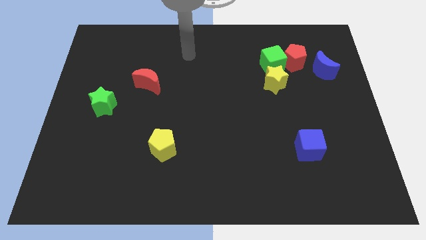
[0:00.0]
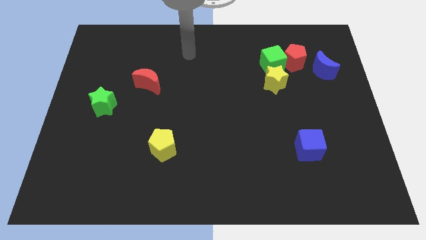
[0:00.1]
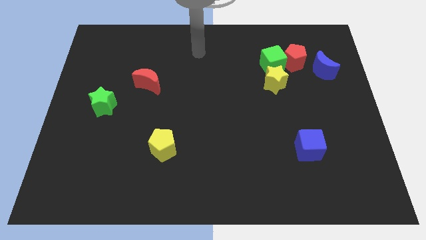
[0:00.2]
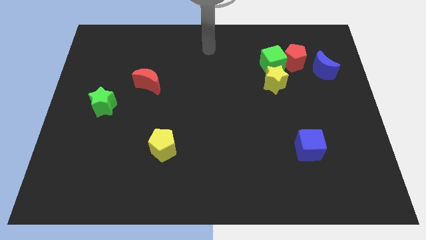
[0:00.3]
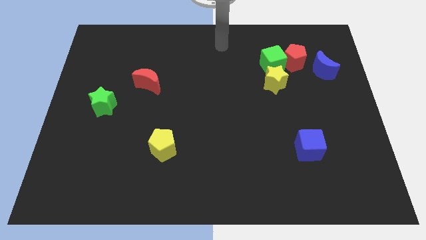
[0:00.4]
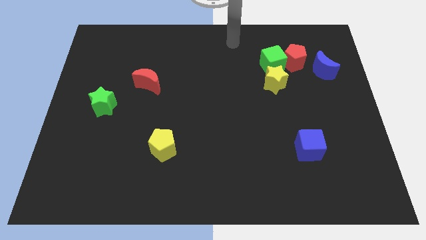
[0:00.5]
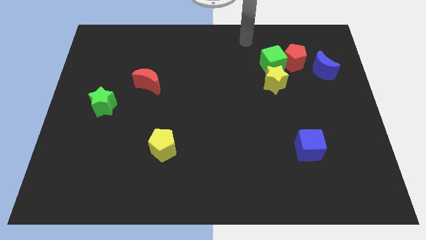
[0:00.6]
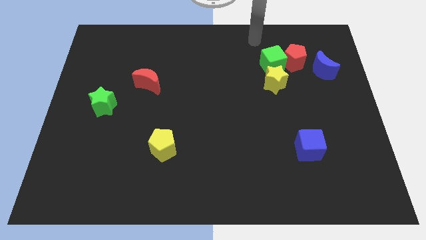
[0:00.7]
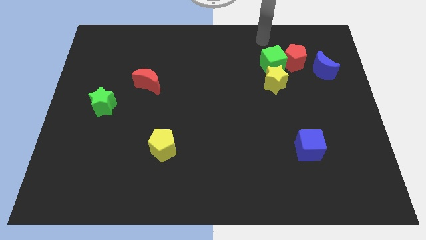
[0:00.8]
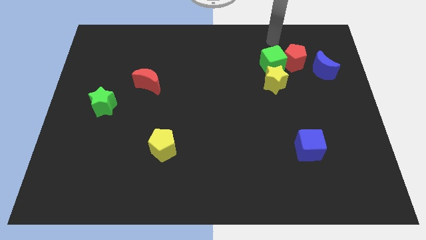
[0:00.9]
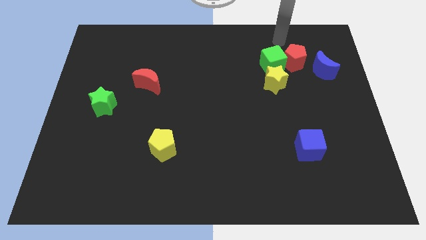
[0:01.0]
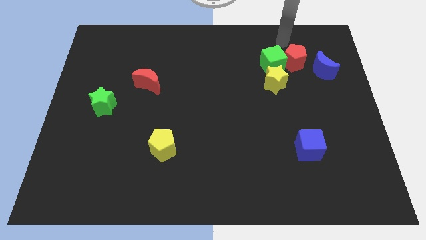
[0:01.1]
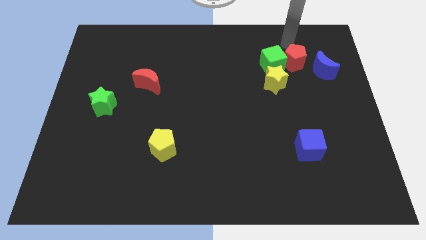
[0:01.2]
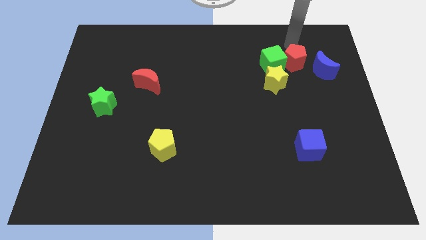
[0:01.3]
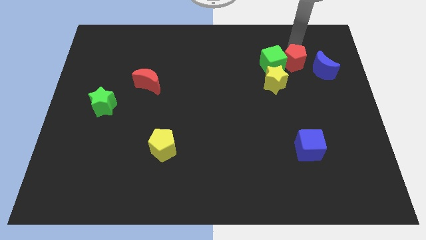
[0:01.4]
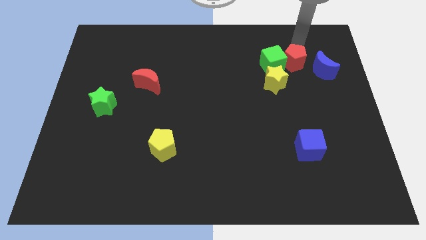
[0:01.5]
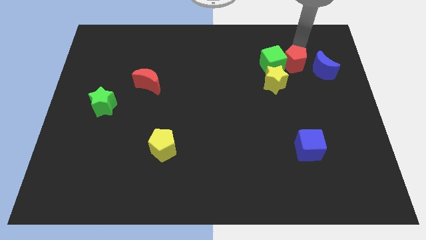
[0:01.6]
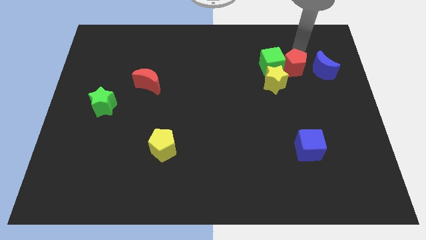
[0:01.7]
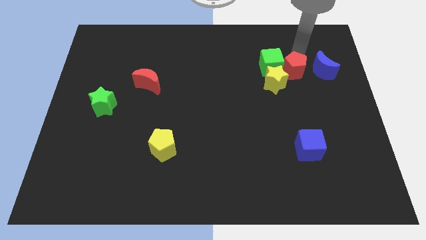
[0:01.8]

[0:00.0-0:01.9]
push red pentagon

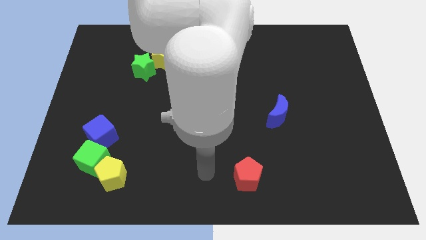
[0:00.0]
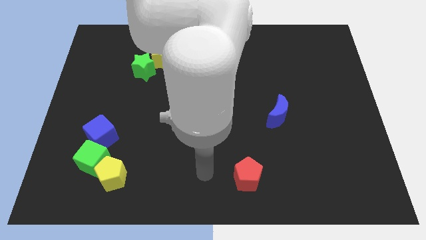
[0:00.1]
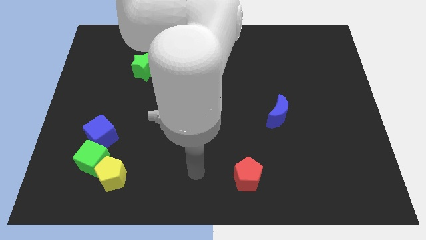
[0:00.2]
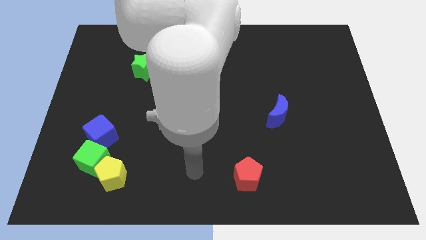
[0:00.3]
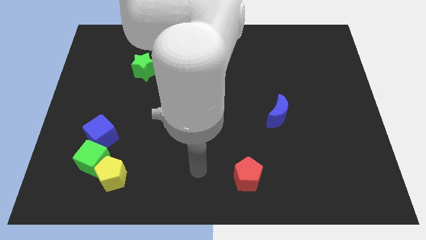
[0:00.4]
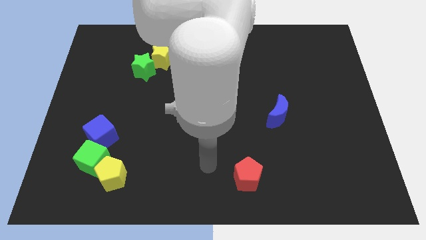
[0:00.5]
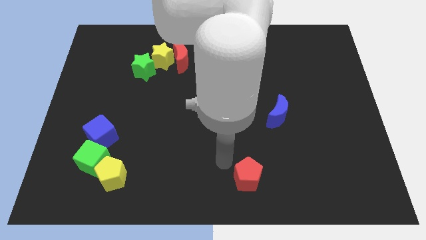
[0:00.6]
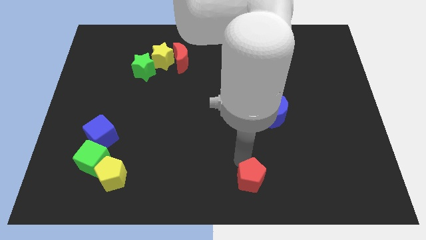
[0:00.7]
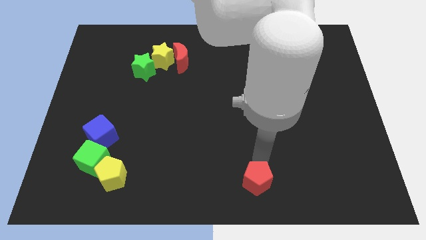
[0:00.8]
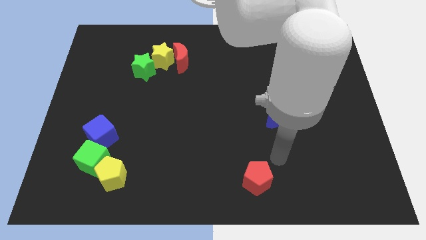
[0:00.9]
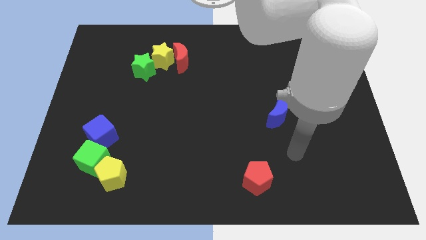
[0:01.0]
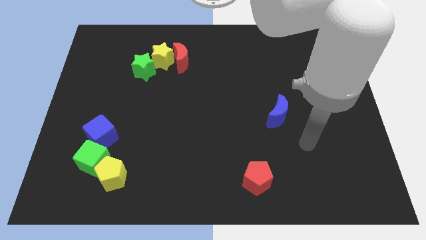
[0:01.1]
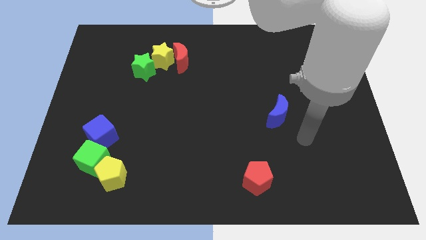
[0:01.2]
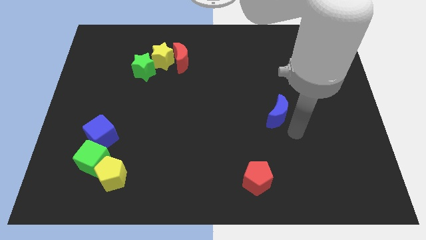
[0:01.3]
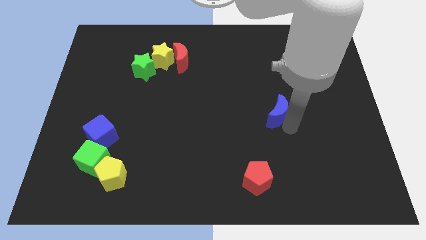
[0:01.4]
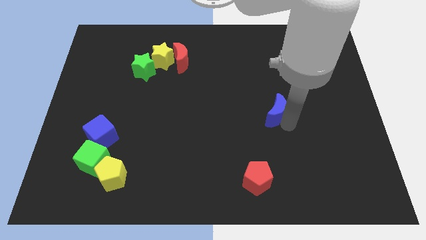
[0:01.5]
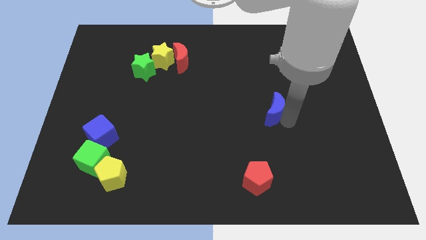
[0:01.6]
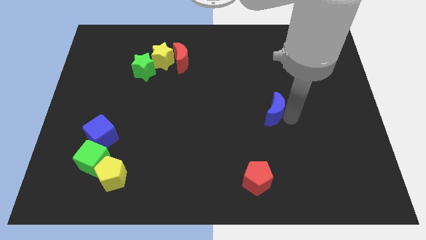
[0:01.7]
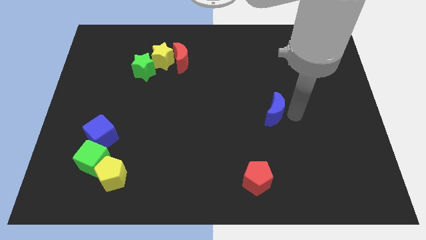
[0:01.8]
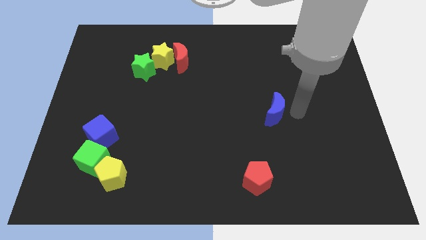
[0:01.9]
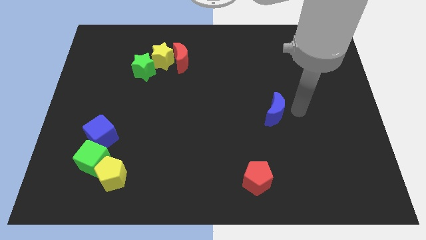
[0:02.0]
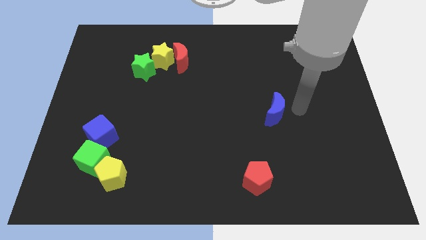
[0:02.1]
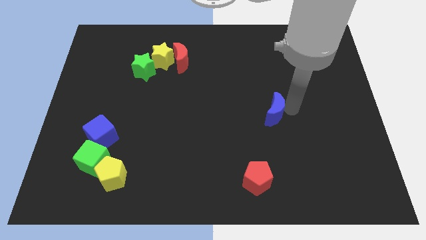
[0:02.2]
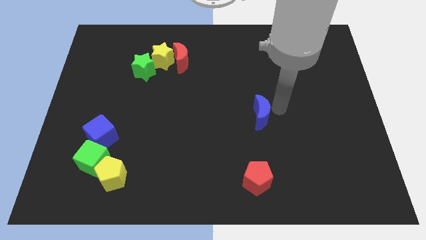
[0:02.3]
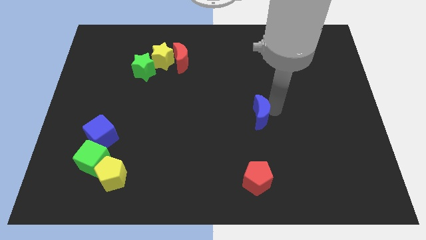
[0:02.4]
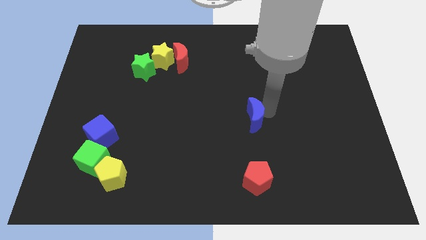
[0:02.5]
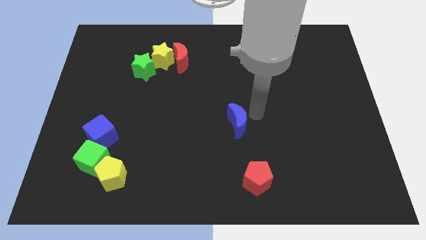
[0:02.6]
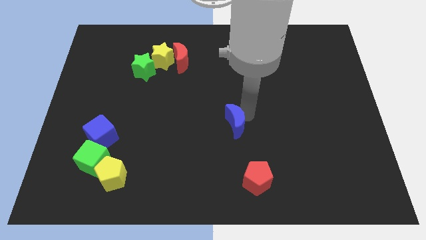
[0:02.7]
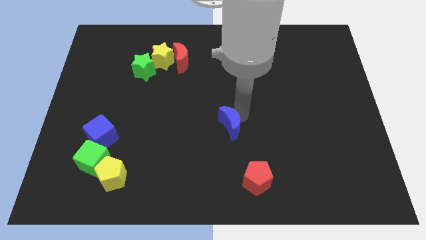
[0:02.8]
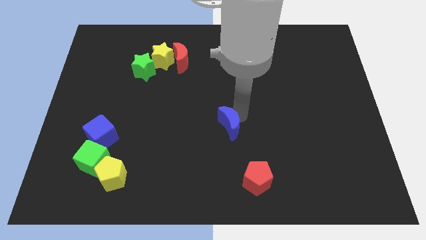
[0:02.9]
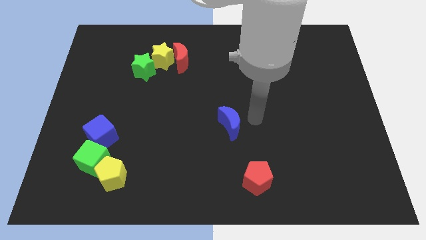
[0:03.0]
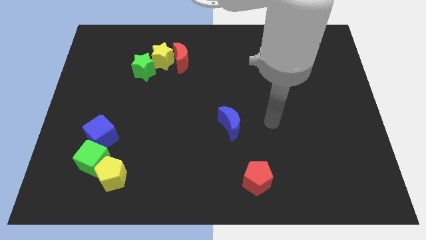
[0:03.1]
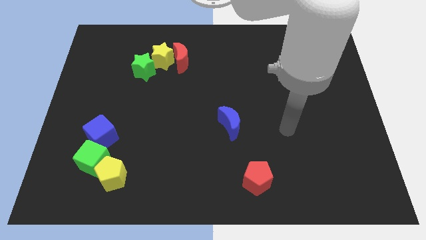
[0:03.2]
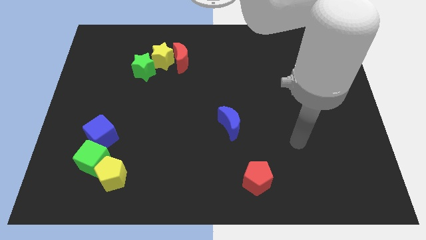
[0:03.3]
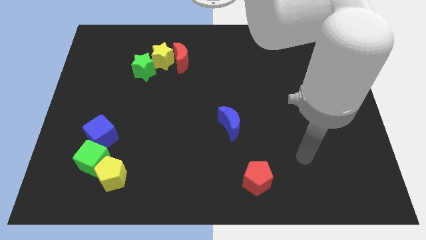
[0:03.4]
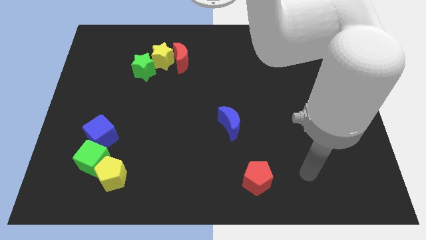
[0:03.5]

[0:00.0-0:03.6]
push the blue crescent slightly to the left of the board

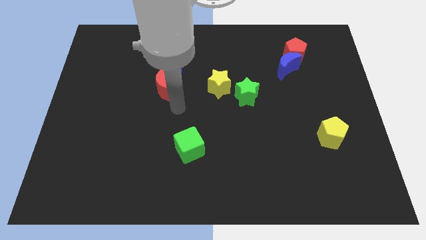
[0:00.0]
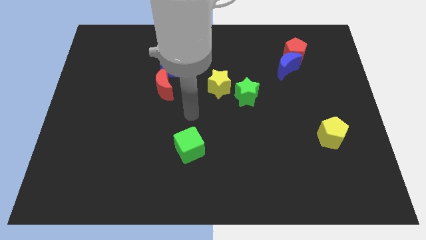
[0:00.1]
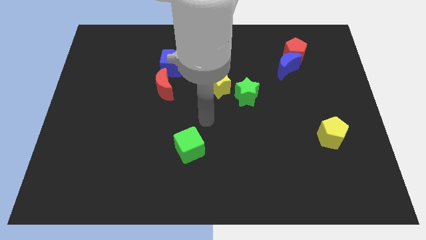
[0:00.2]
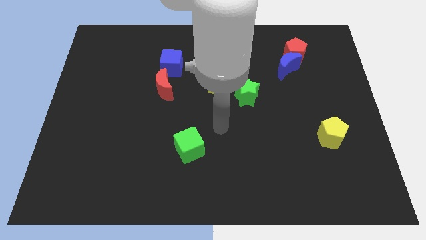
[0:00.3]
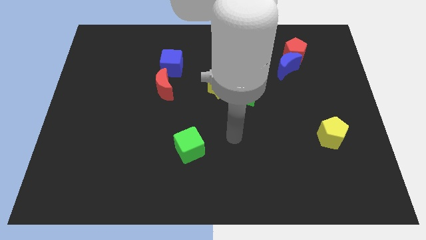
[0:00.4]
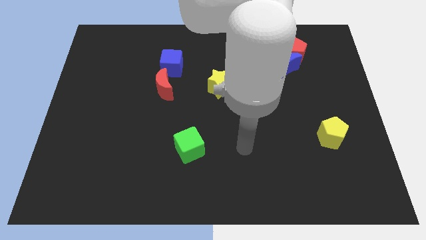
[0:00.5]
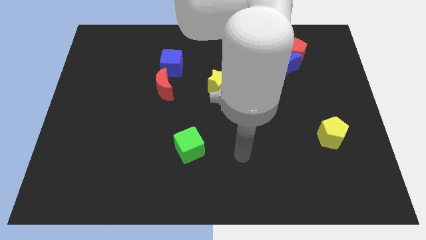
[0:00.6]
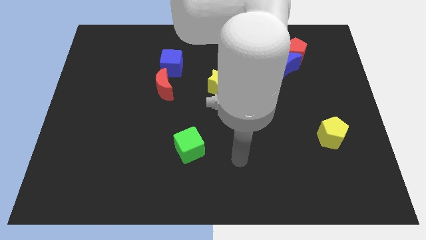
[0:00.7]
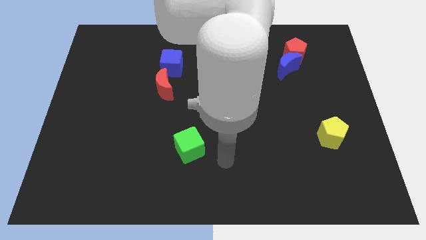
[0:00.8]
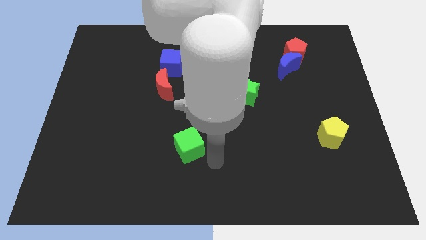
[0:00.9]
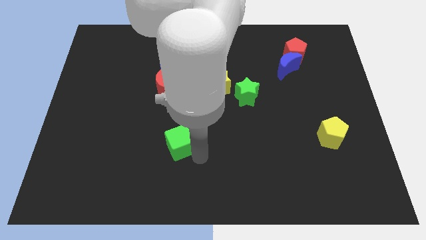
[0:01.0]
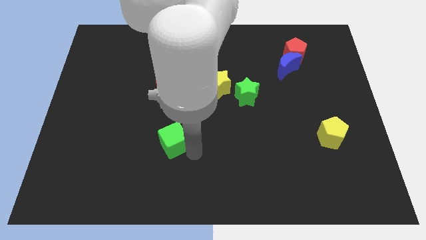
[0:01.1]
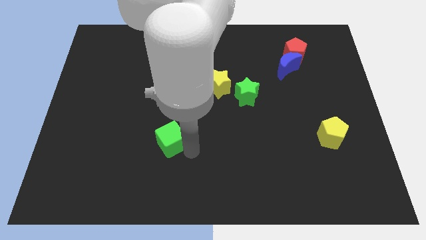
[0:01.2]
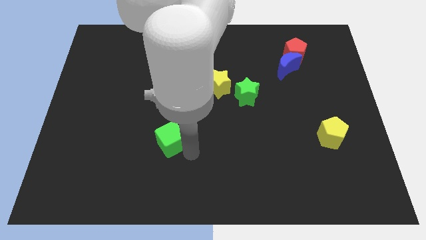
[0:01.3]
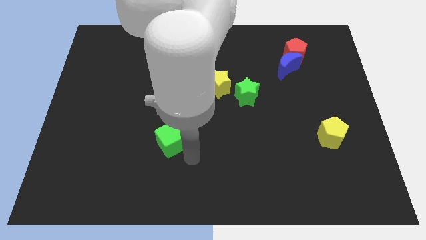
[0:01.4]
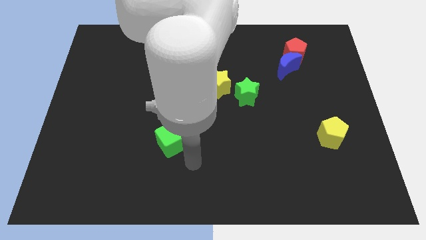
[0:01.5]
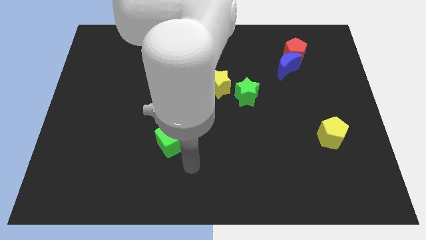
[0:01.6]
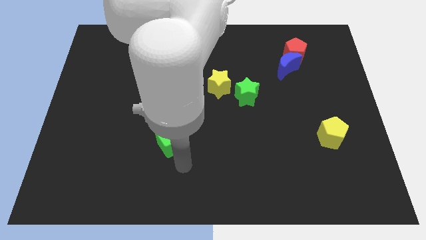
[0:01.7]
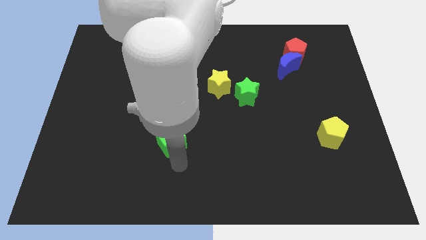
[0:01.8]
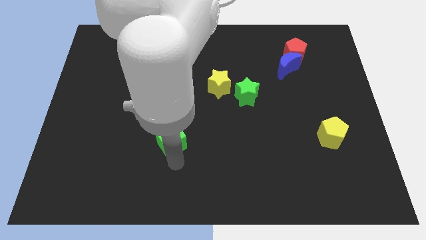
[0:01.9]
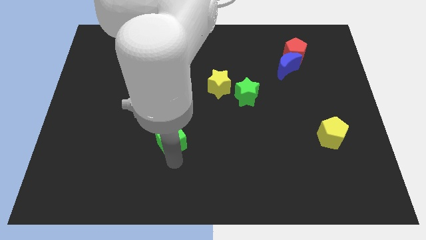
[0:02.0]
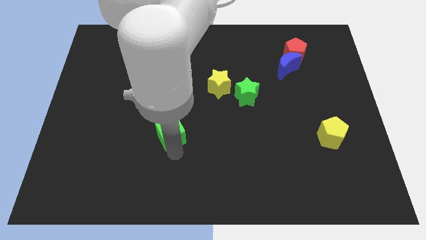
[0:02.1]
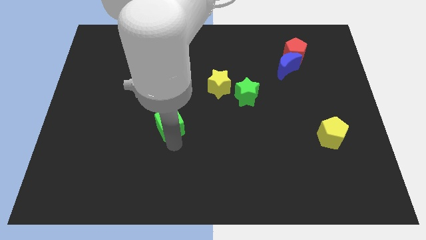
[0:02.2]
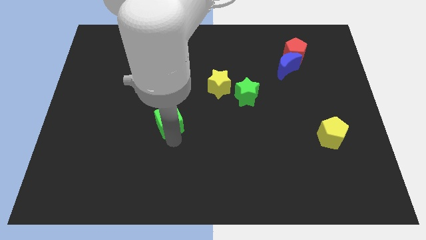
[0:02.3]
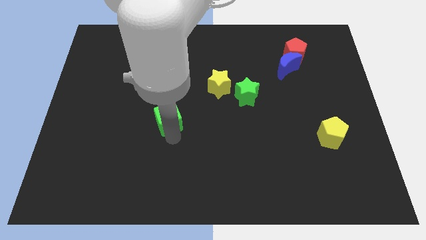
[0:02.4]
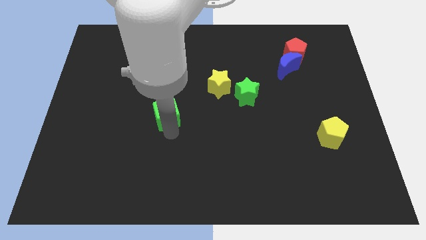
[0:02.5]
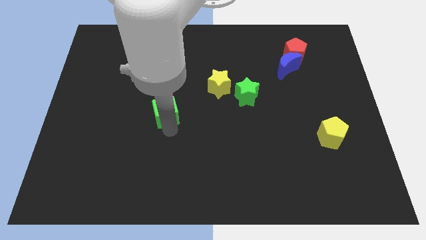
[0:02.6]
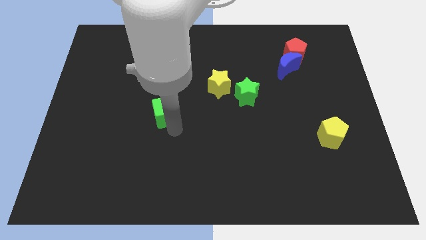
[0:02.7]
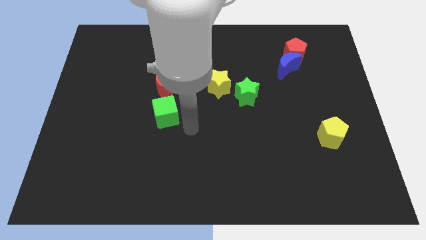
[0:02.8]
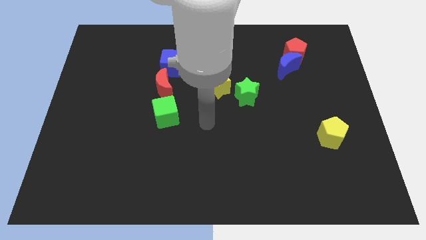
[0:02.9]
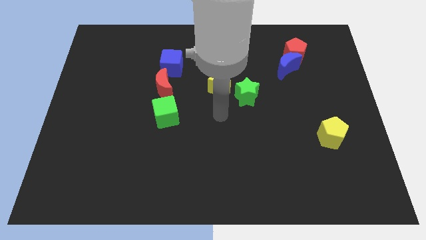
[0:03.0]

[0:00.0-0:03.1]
push the green cube below the red crescent

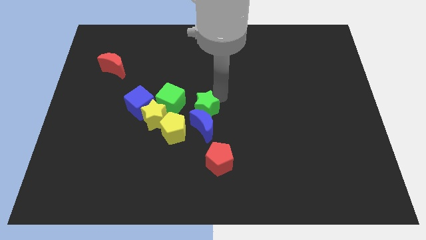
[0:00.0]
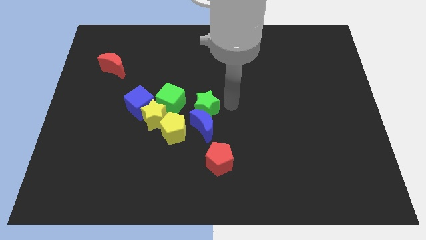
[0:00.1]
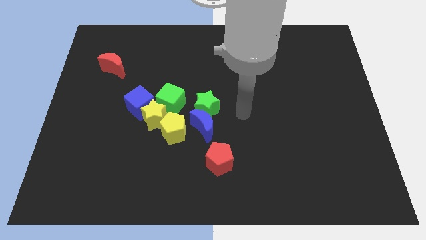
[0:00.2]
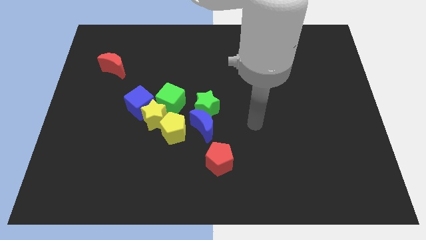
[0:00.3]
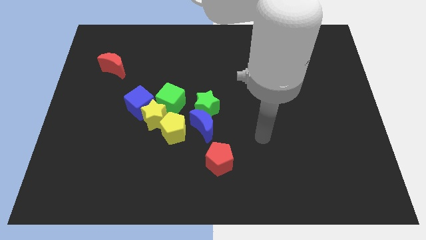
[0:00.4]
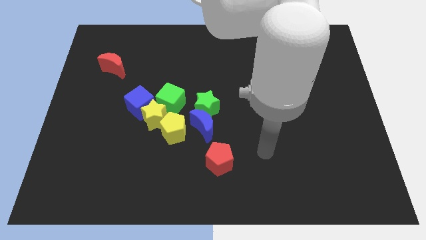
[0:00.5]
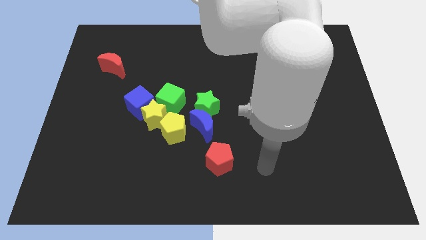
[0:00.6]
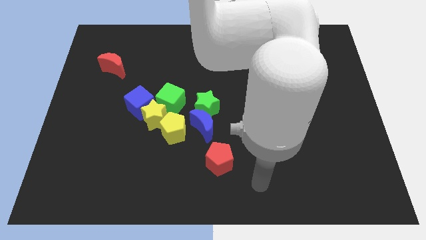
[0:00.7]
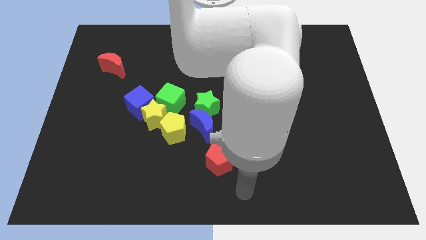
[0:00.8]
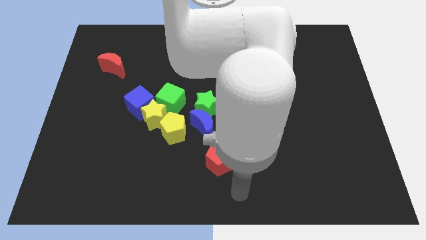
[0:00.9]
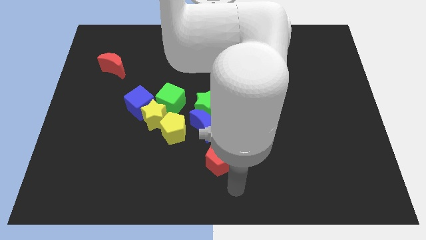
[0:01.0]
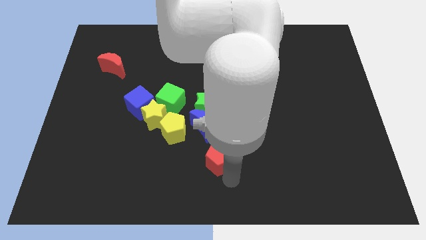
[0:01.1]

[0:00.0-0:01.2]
move the arm away from the green star
